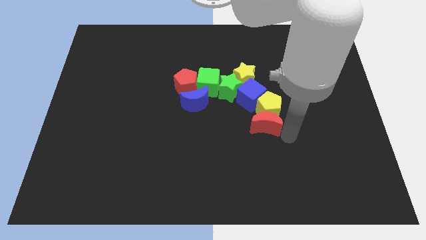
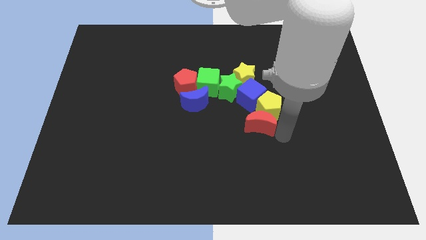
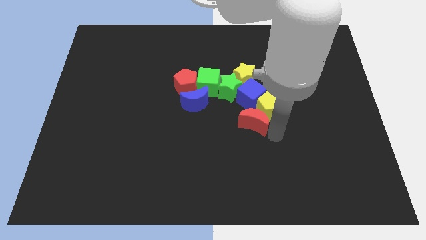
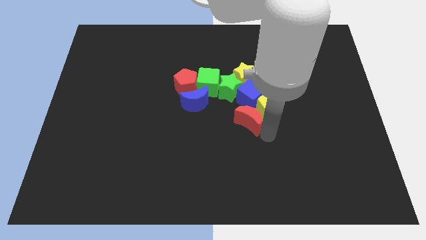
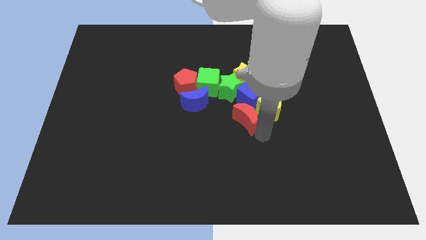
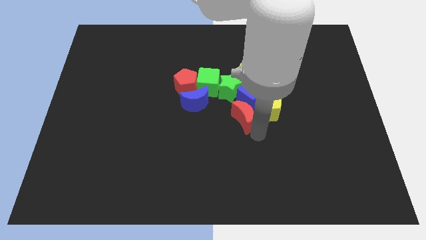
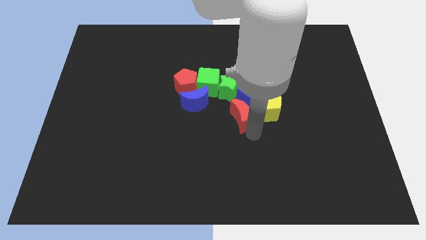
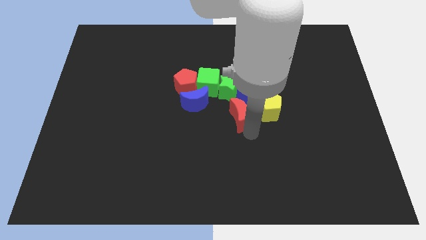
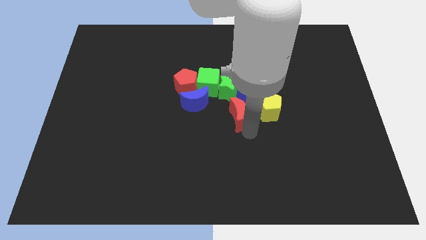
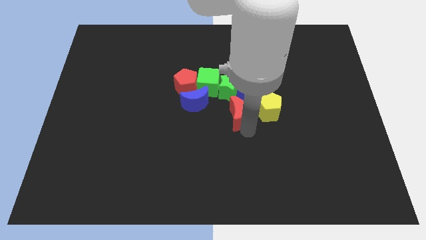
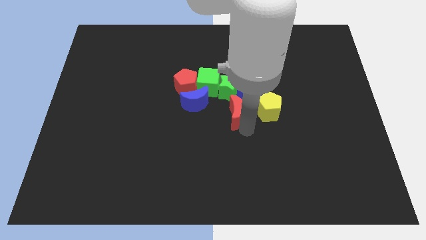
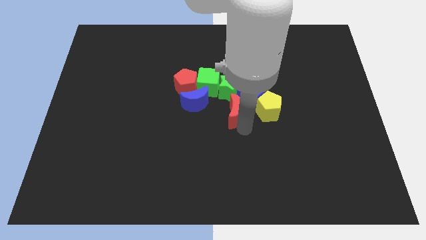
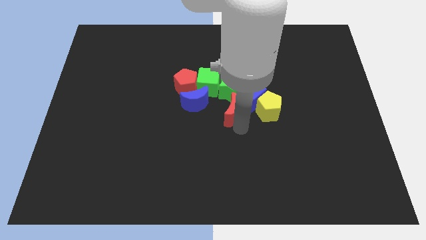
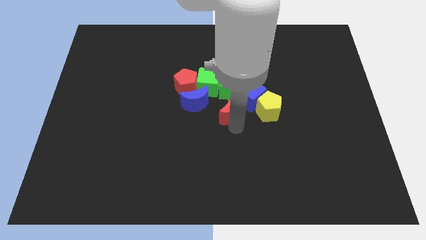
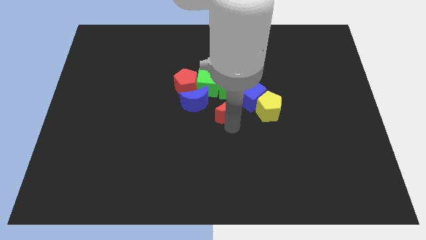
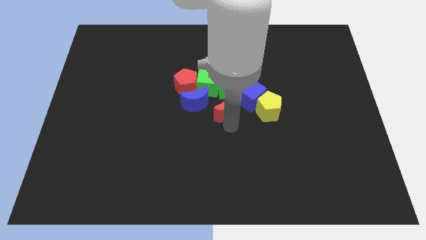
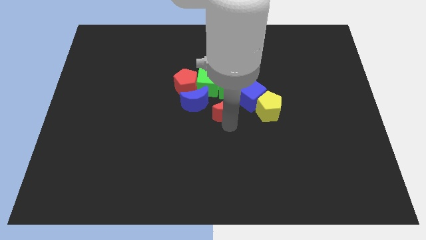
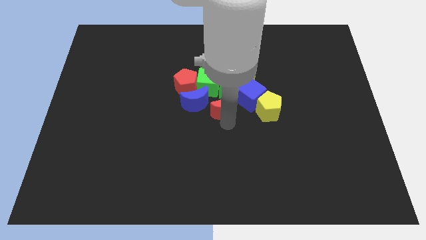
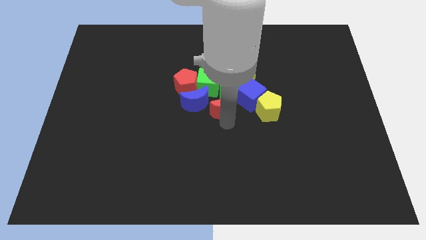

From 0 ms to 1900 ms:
move the red crescent near the blue crescent

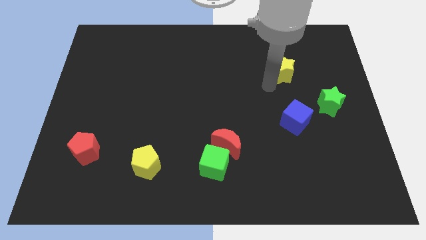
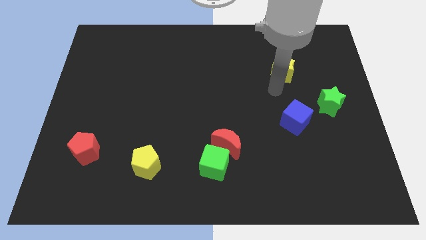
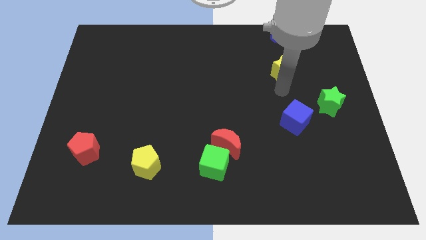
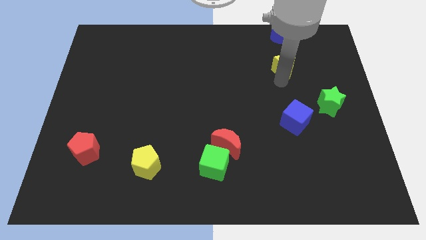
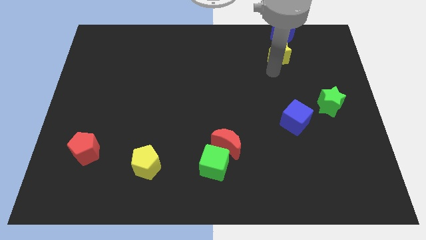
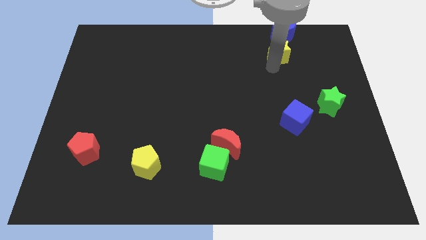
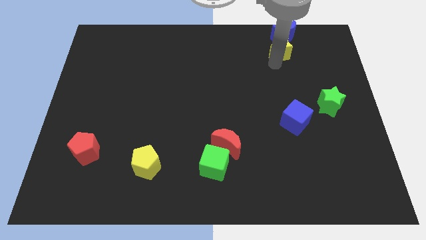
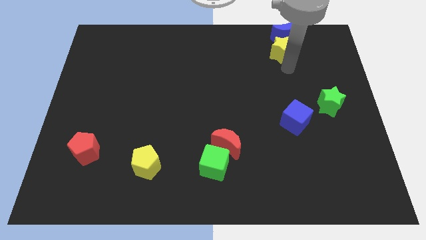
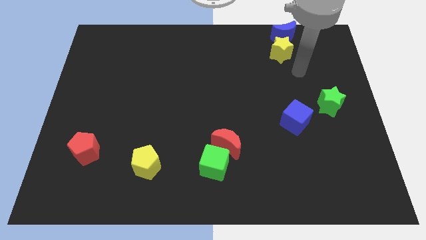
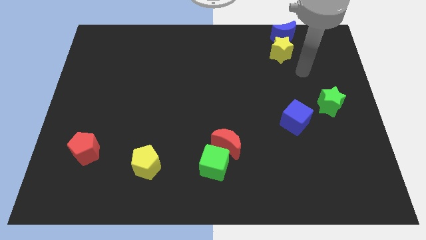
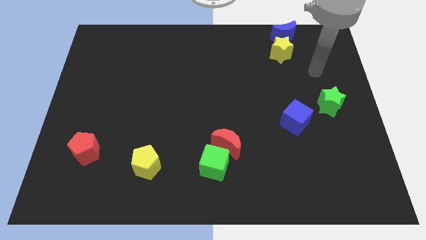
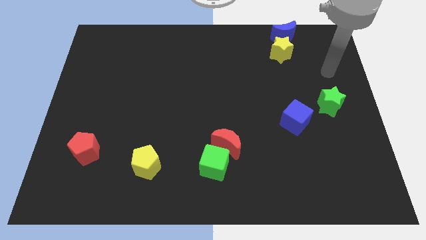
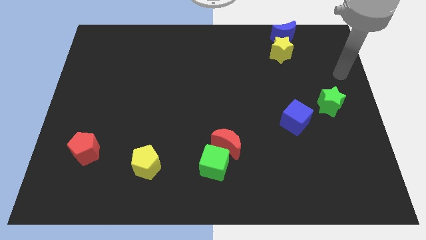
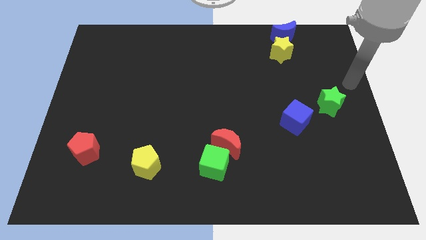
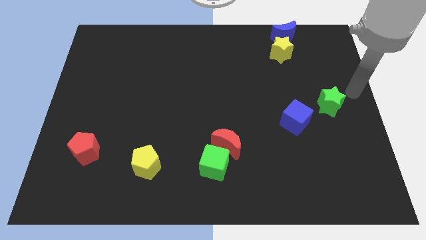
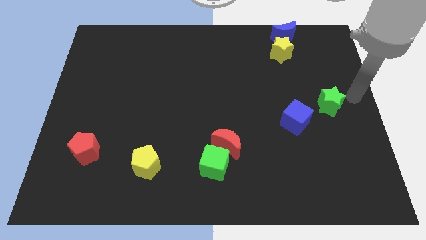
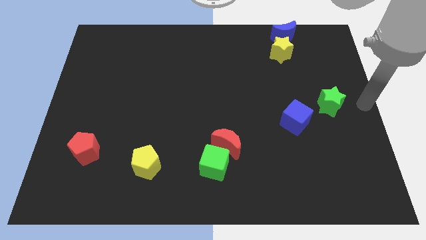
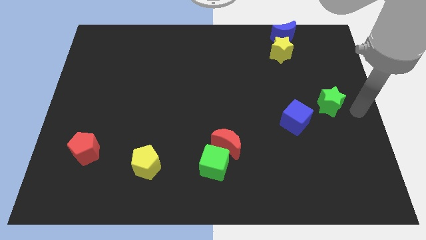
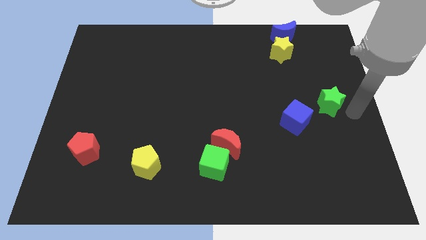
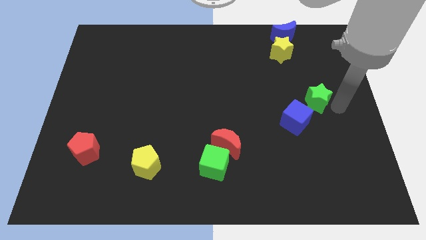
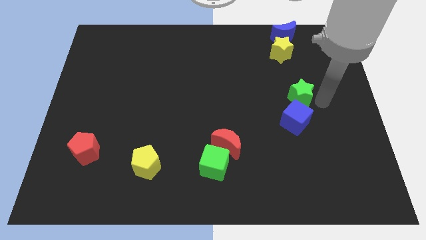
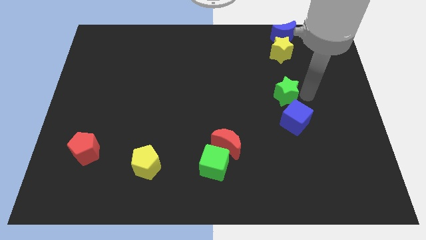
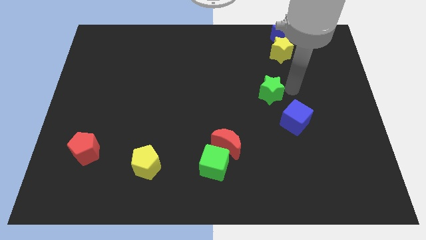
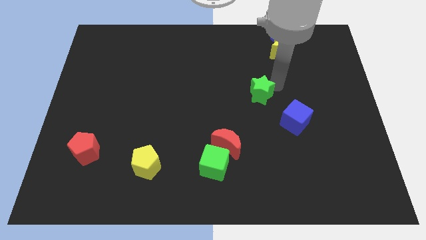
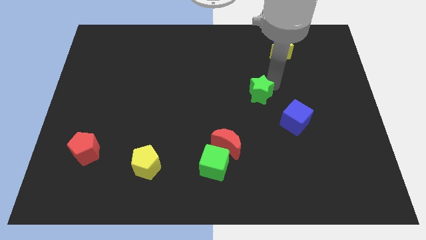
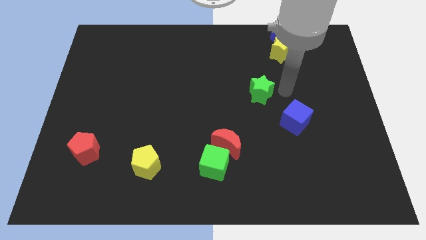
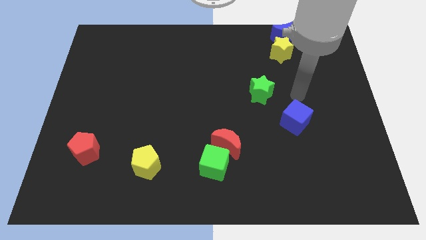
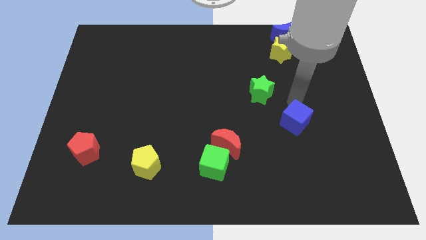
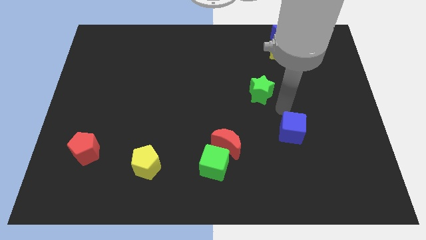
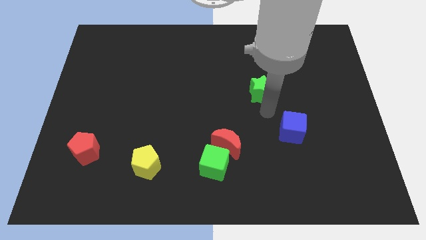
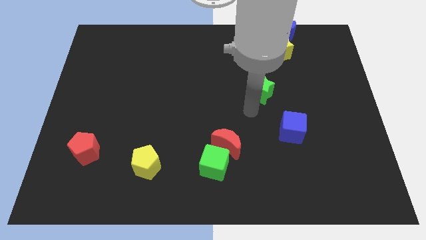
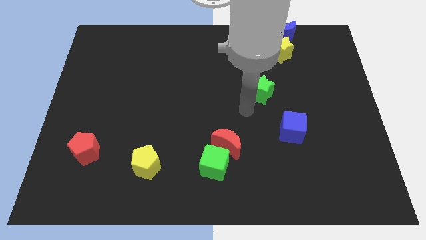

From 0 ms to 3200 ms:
separate the yellow and green star and blue cube

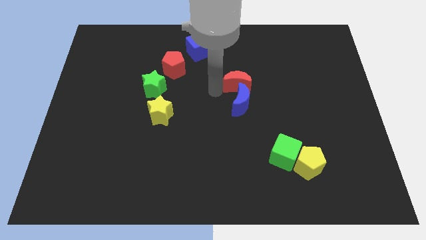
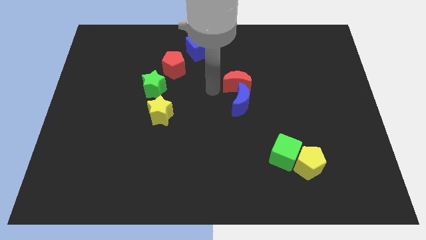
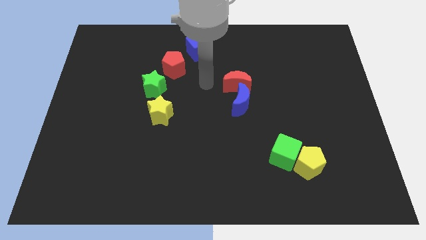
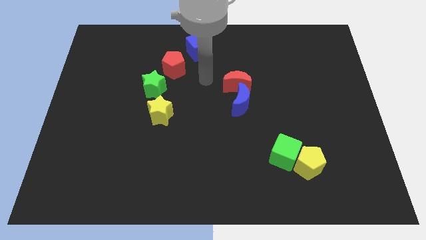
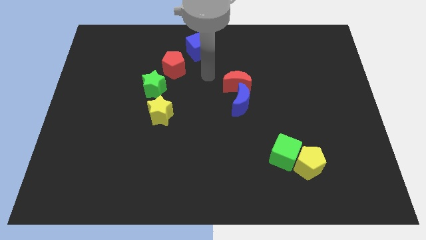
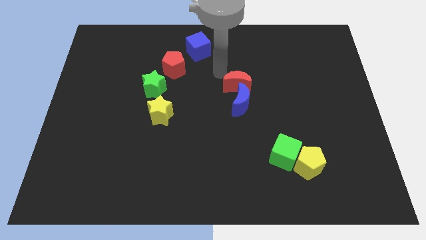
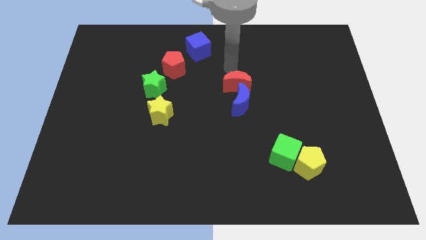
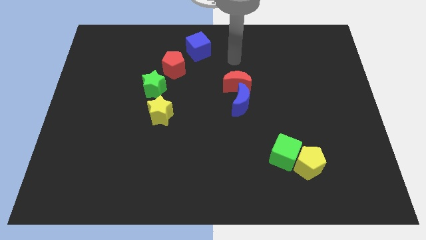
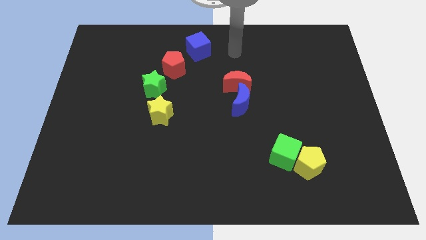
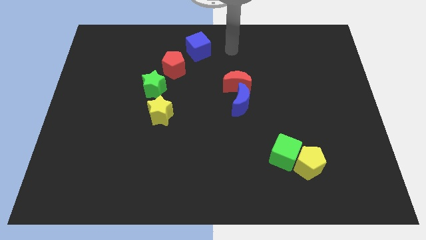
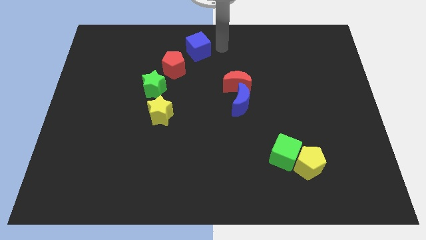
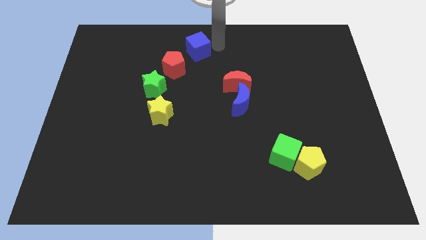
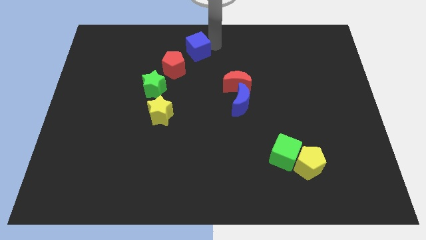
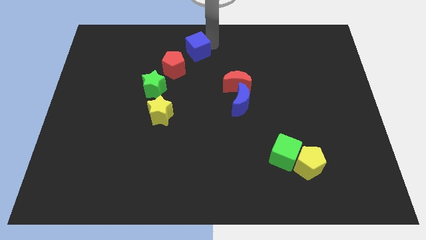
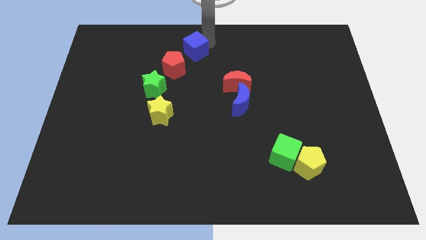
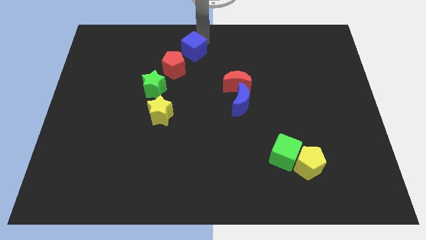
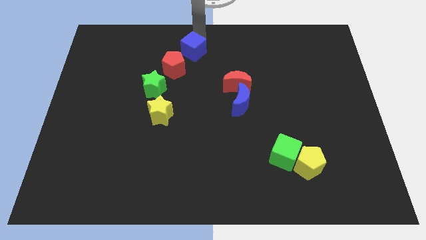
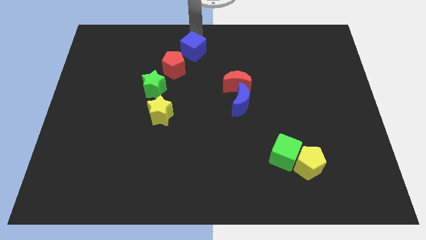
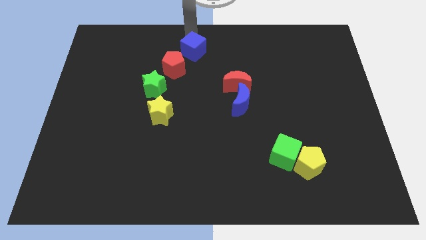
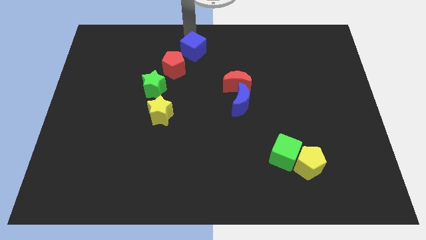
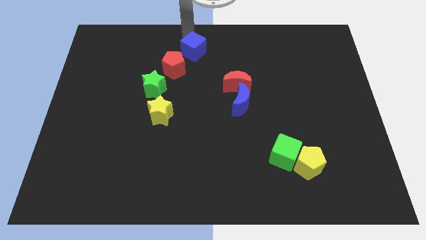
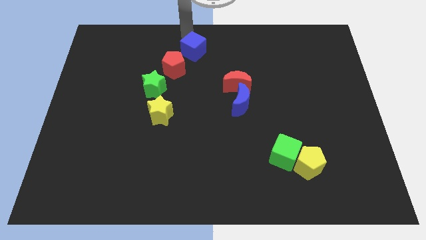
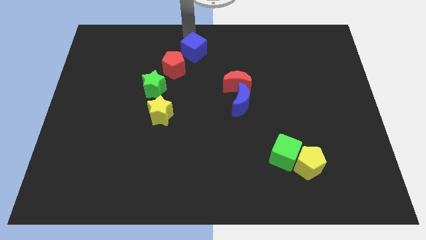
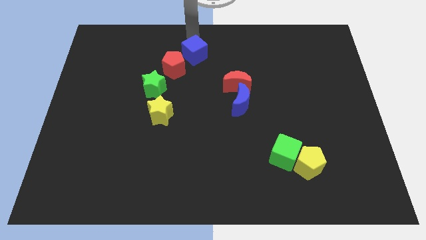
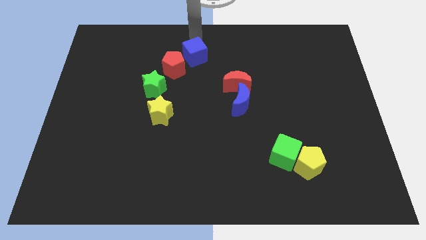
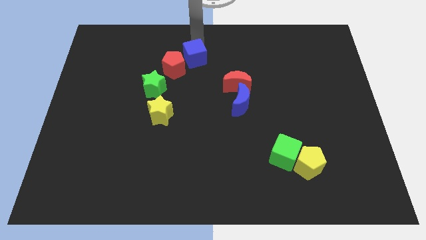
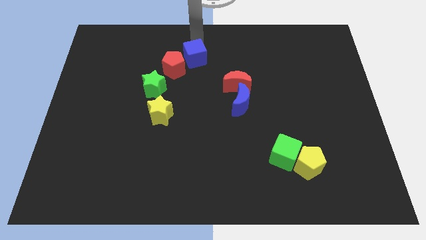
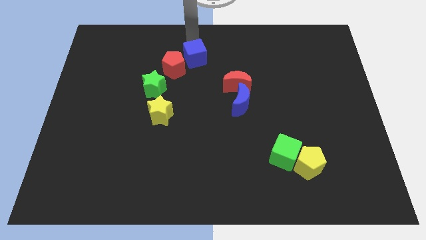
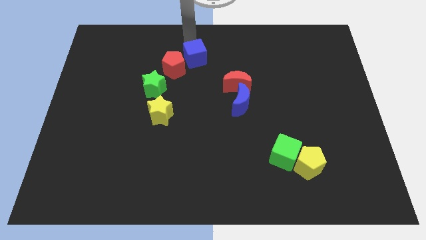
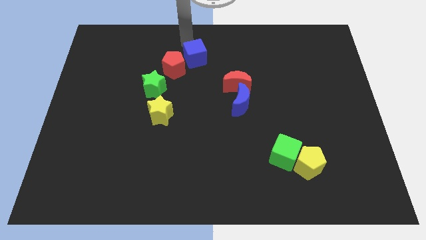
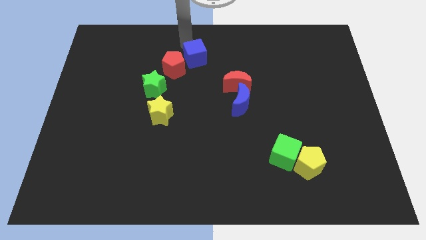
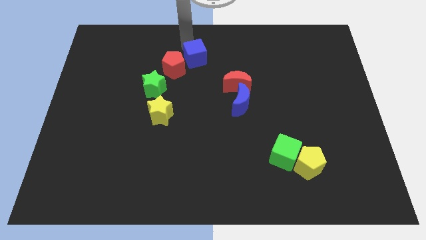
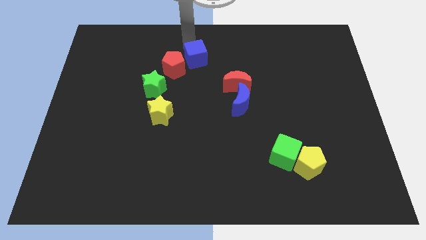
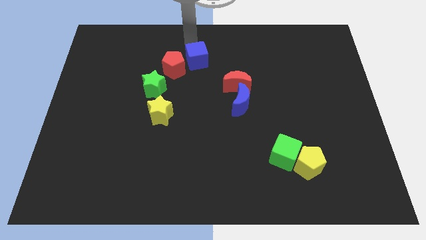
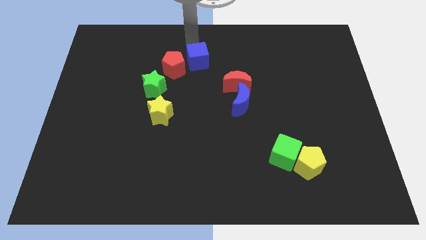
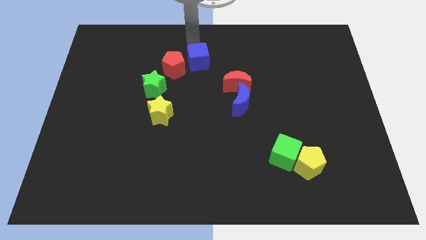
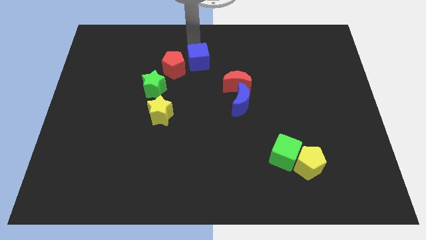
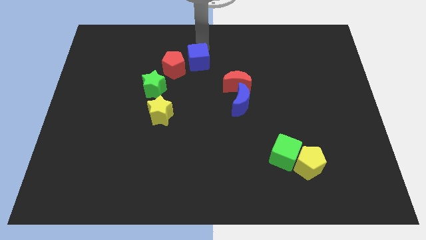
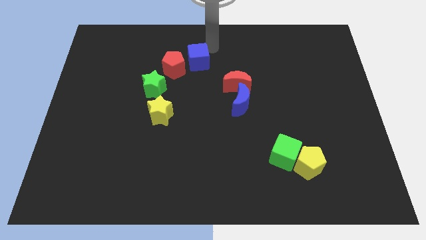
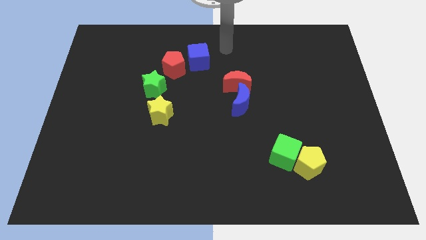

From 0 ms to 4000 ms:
place the blue cube at the top center
